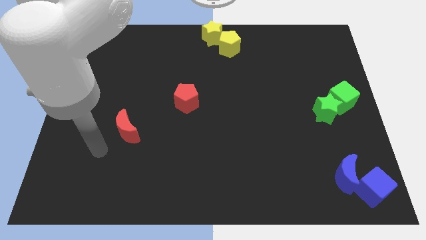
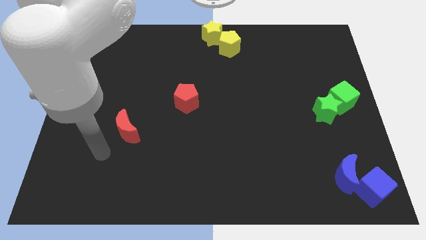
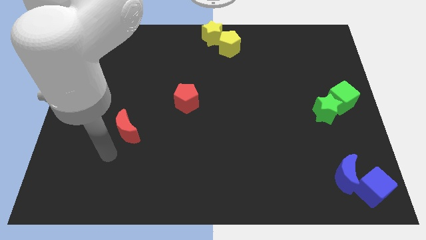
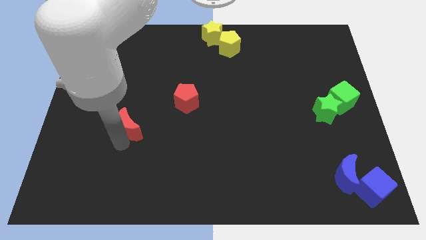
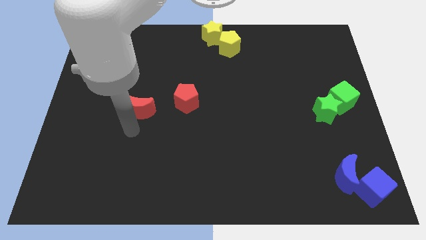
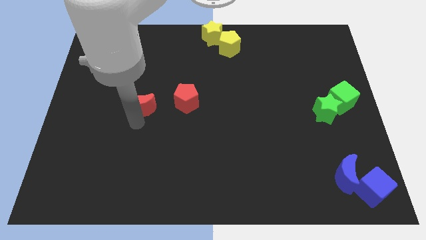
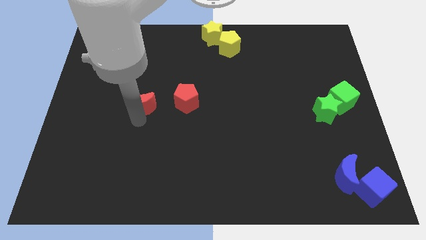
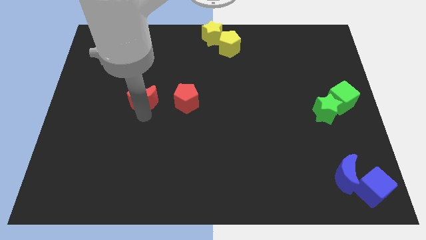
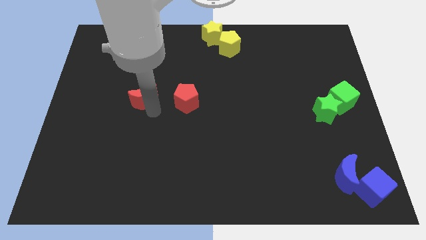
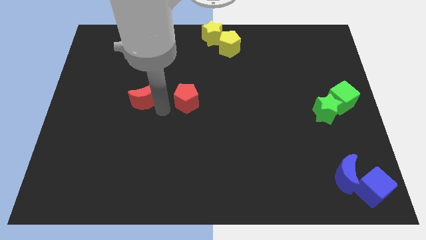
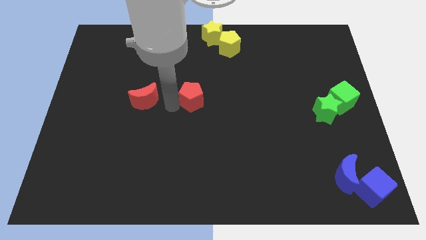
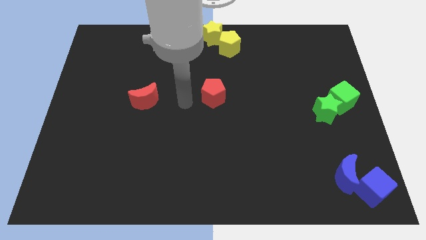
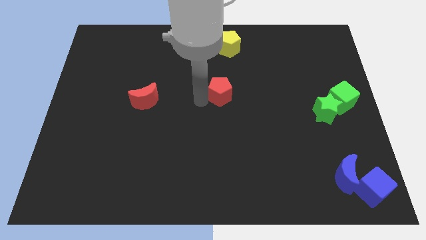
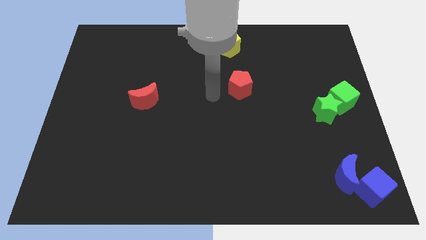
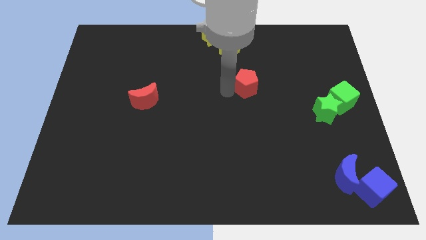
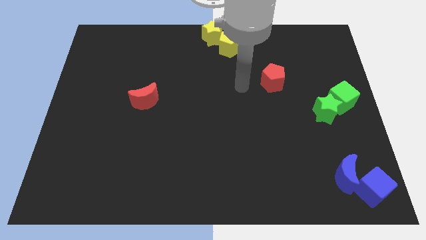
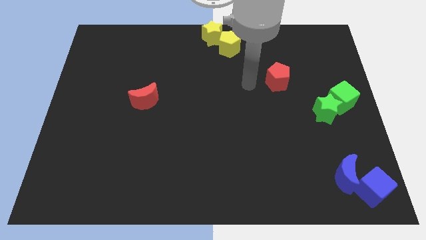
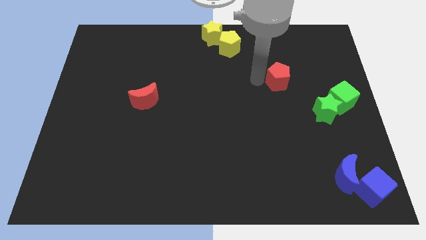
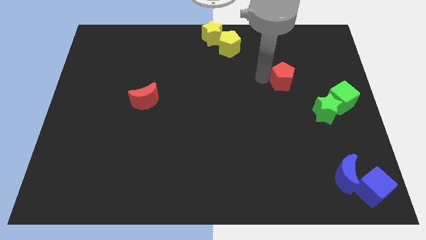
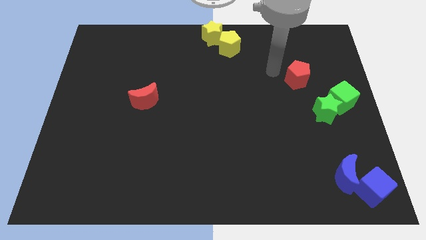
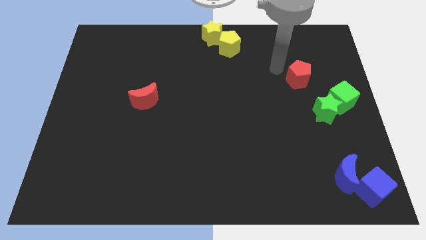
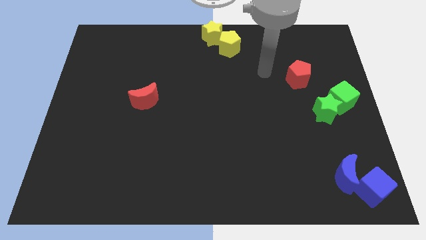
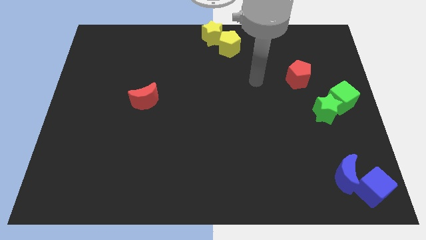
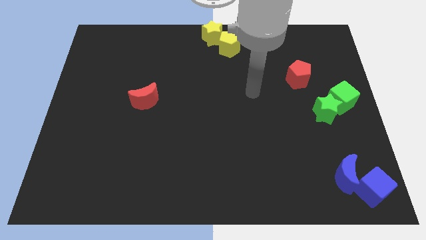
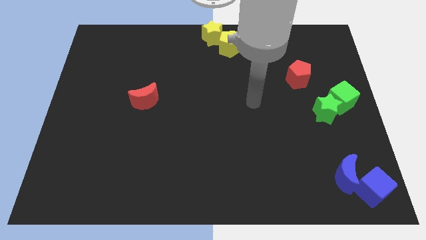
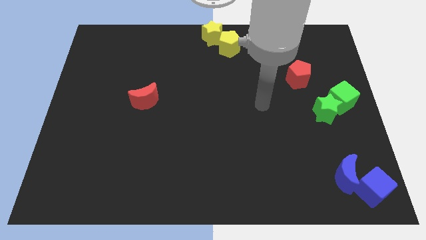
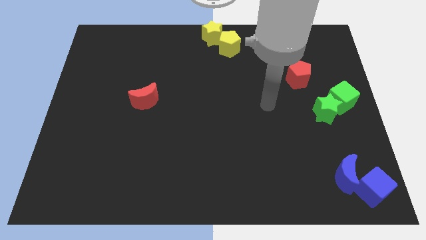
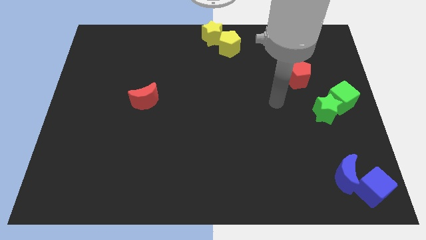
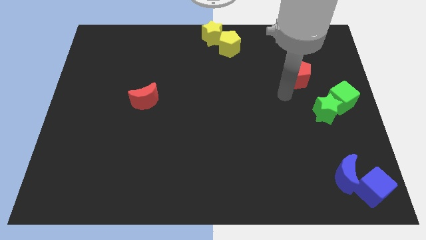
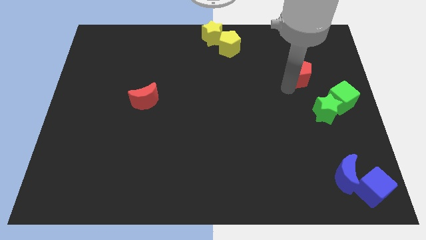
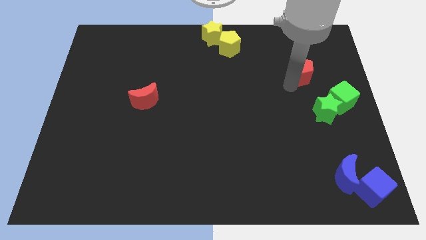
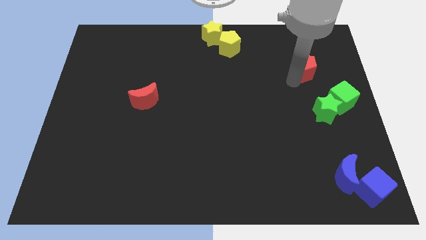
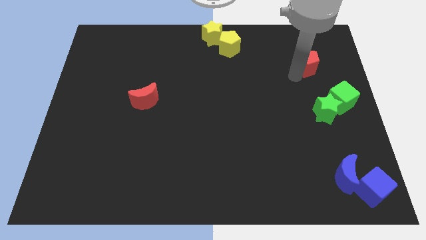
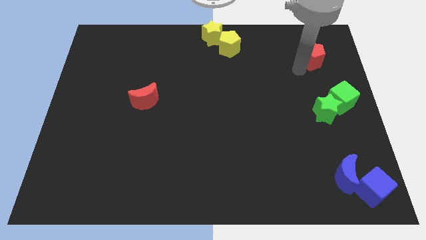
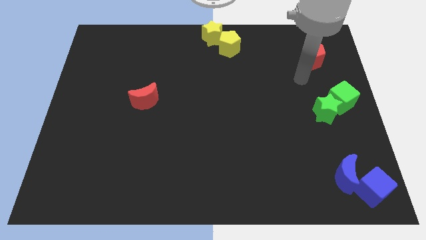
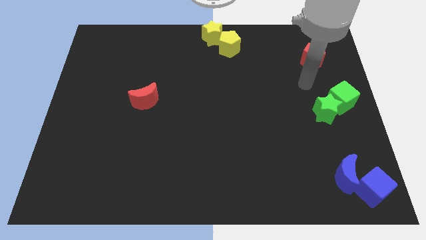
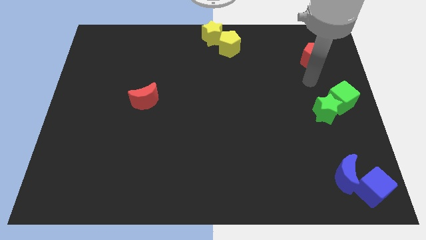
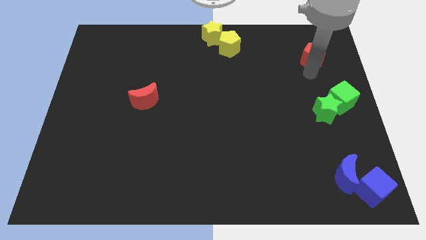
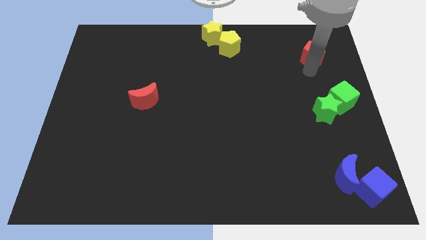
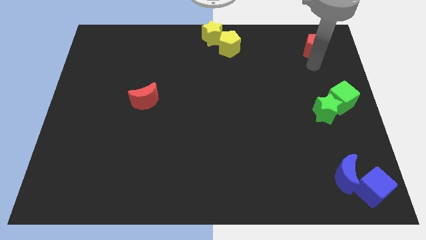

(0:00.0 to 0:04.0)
place the red pentagon towards the top right corner of the board

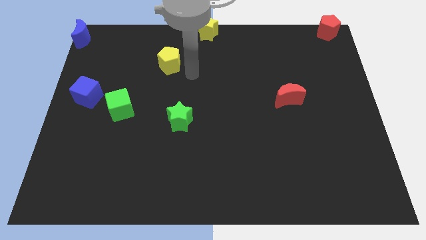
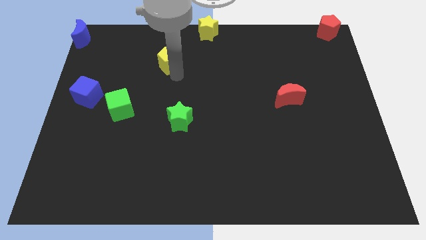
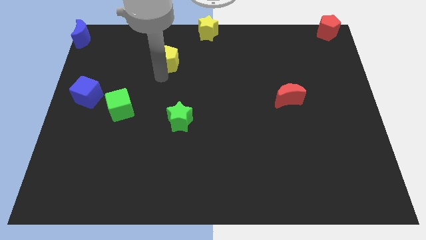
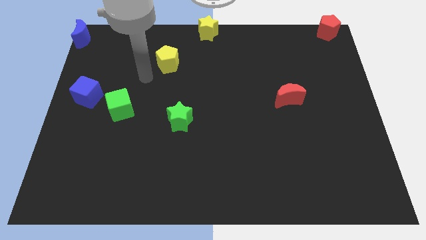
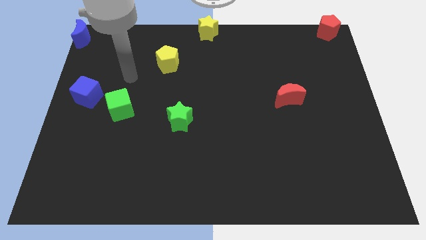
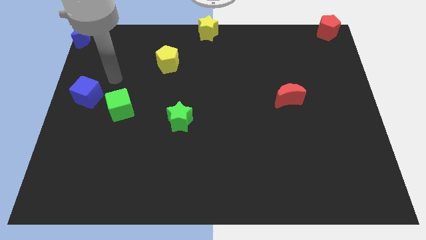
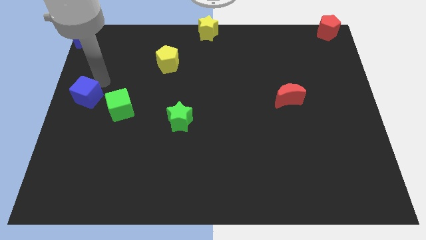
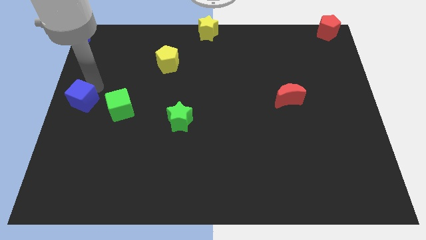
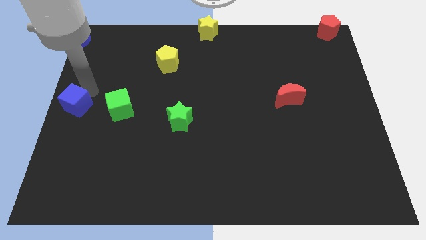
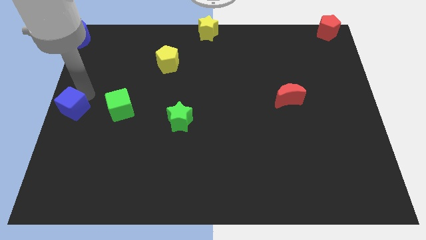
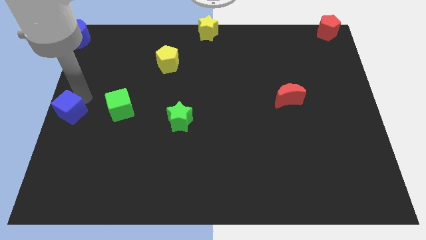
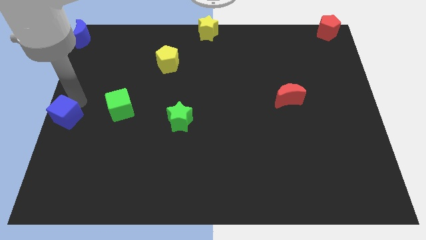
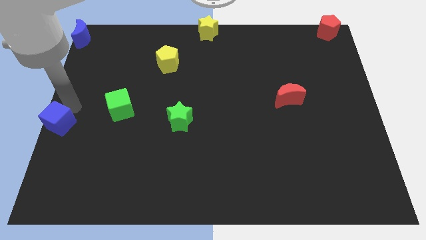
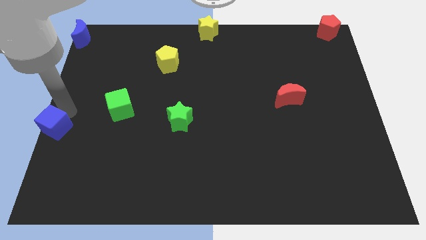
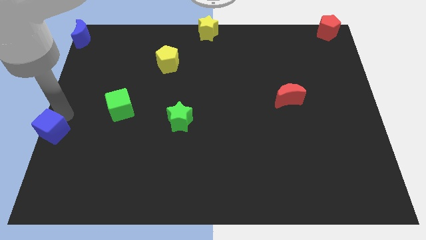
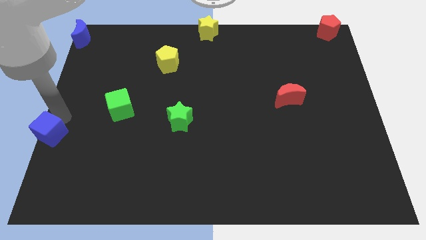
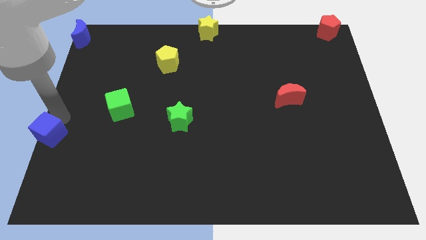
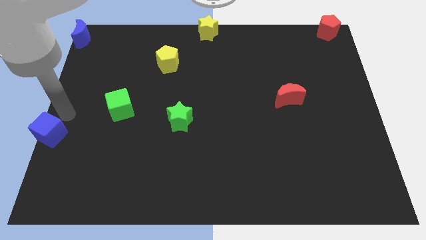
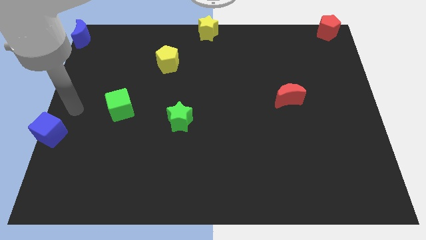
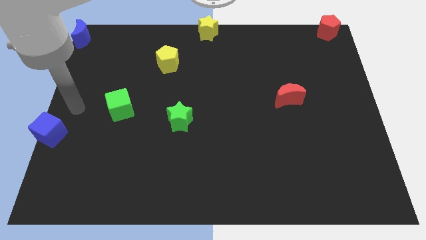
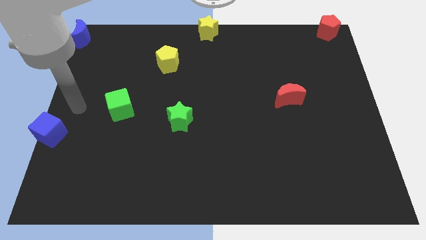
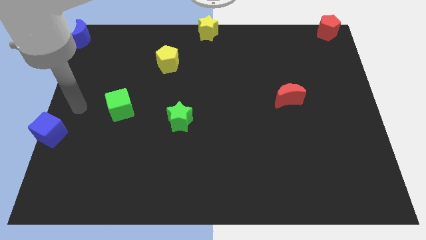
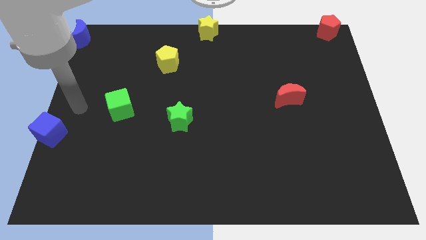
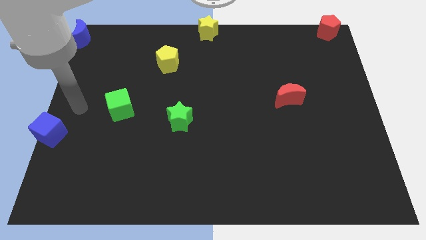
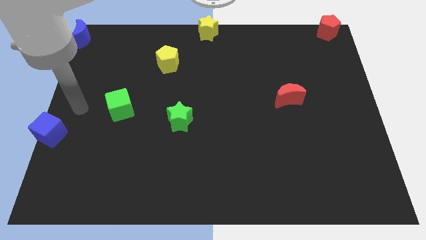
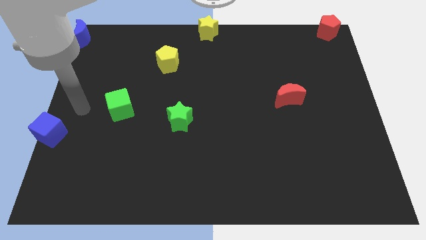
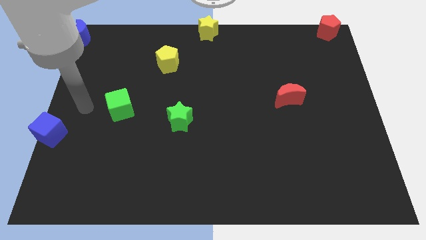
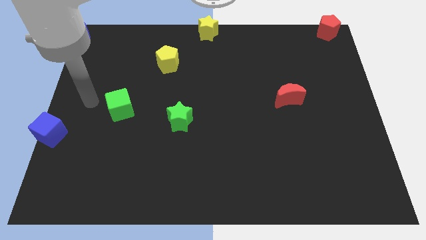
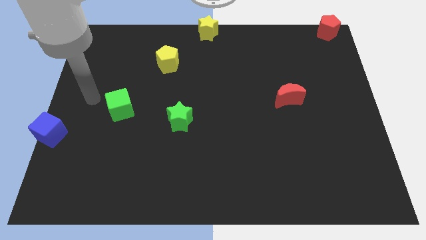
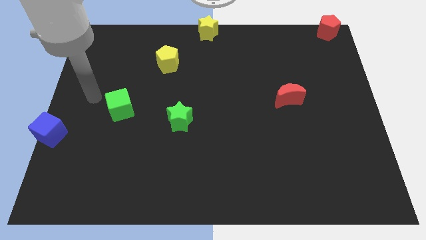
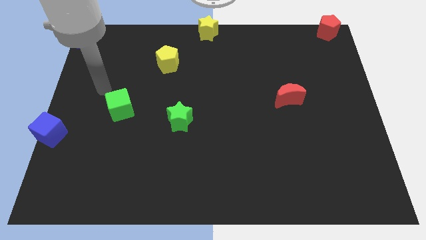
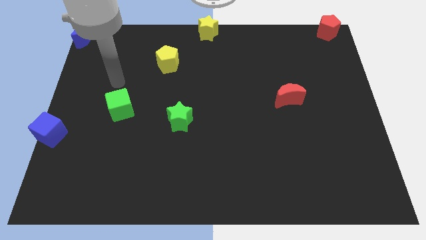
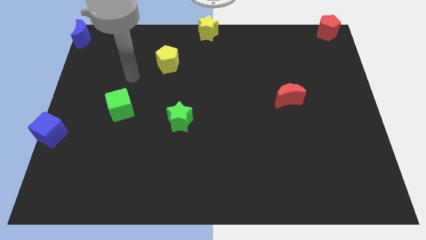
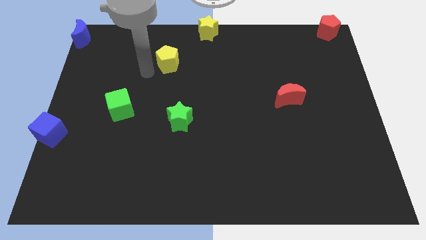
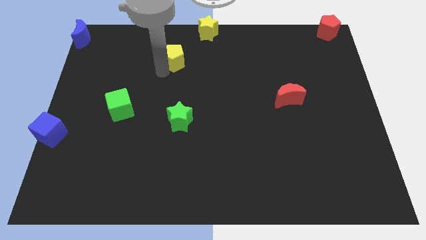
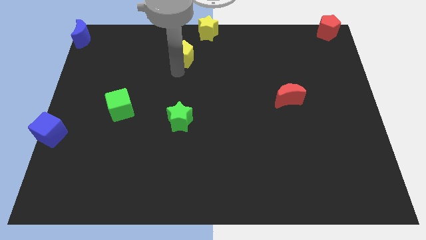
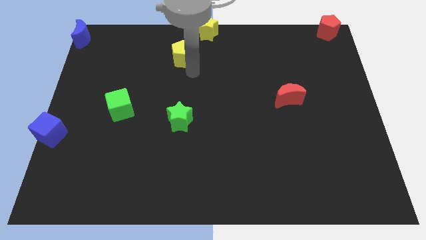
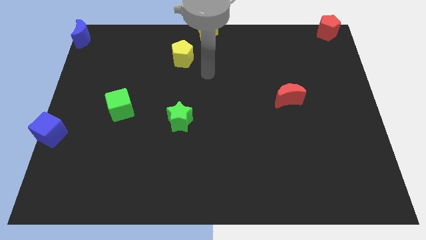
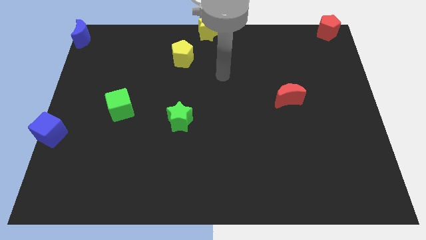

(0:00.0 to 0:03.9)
push the blue cube towards the bottom side of the board

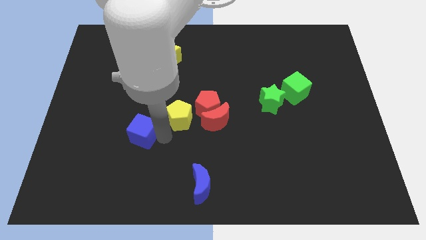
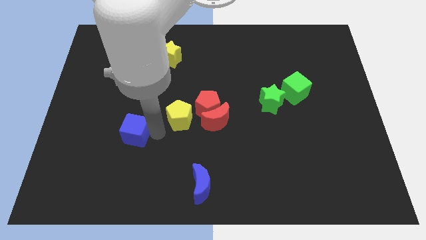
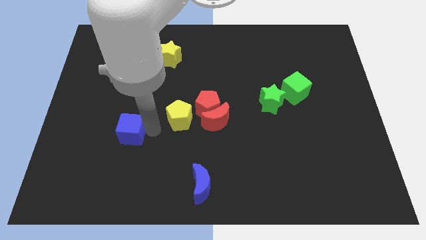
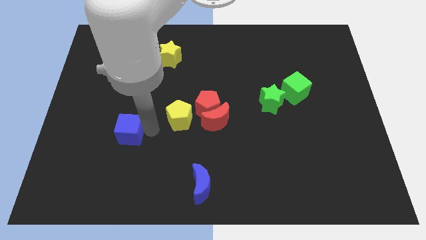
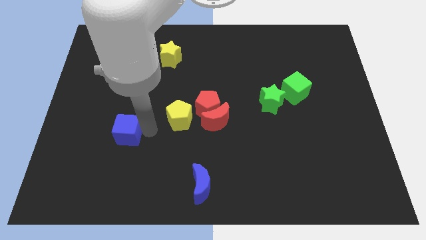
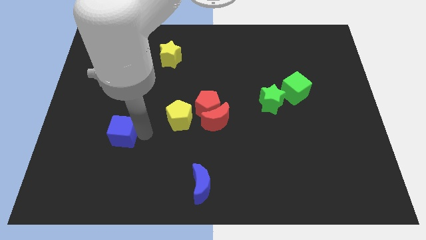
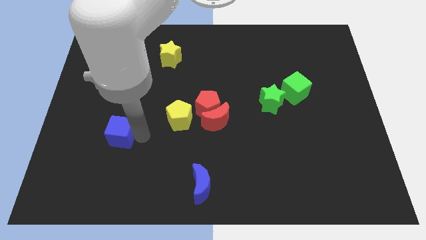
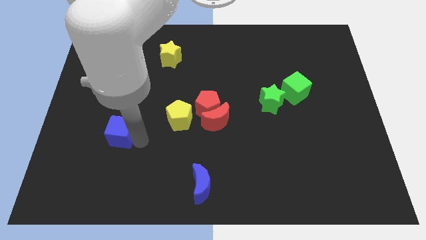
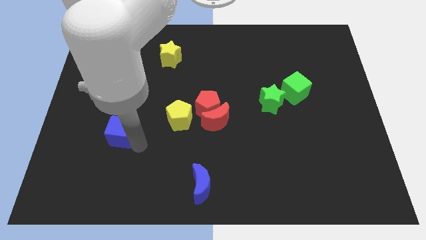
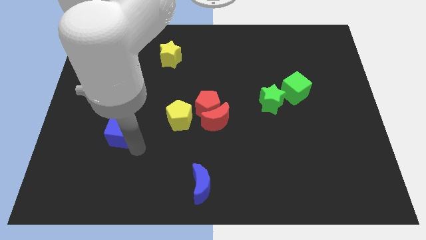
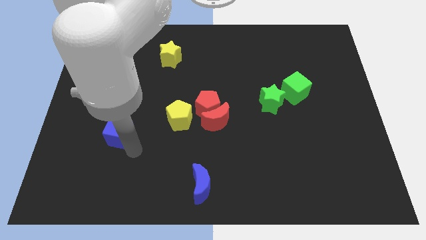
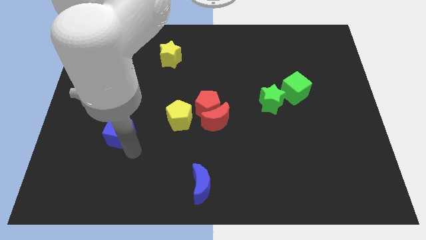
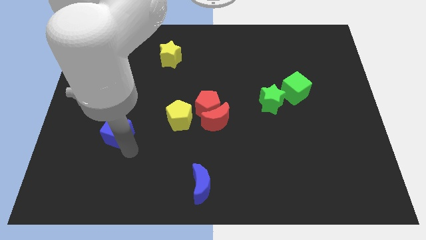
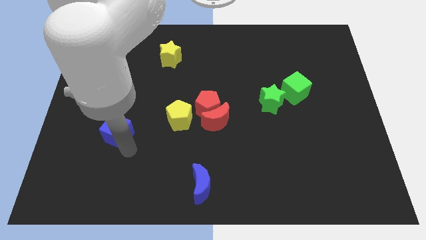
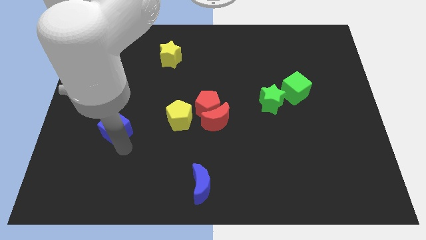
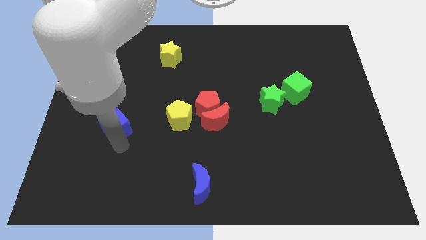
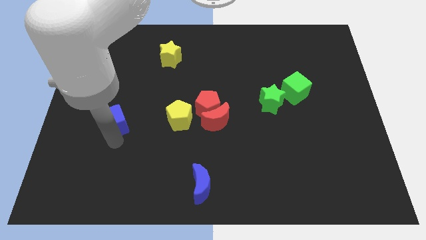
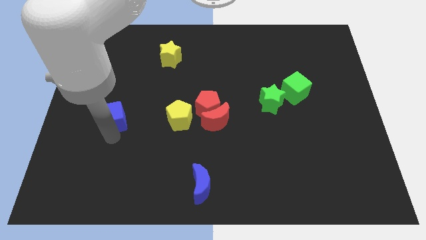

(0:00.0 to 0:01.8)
move the blue cube to the left of yellow pentagon
